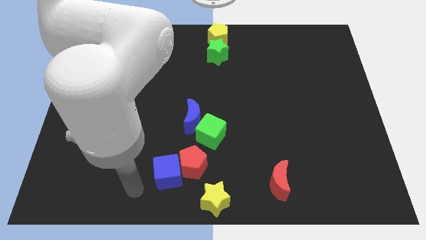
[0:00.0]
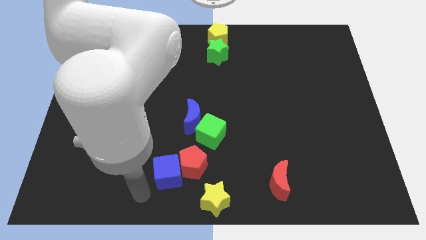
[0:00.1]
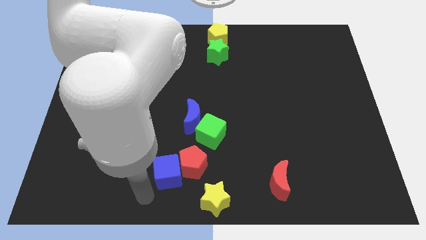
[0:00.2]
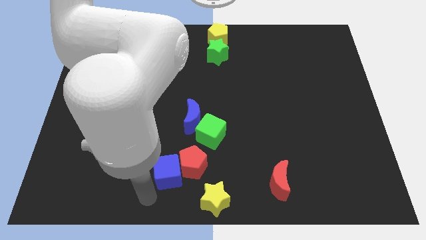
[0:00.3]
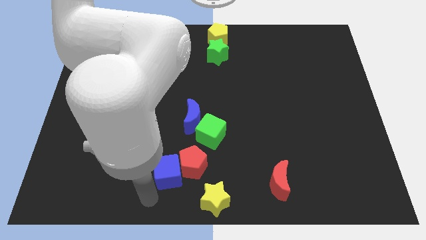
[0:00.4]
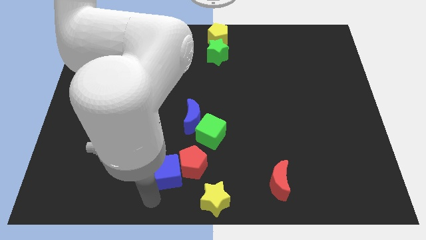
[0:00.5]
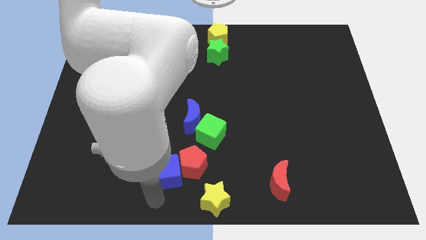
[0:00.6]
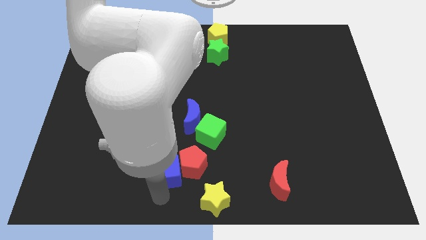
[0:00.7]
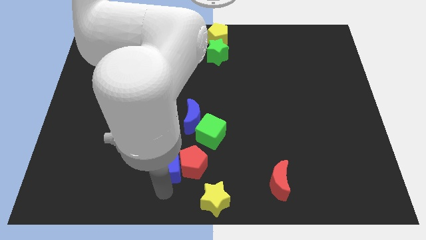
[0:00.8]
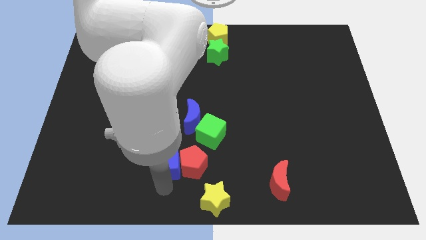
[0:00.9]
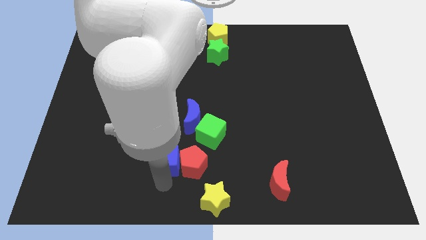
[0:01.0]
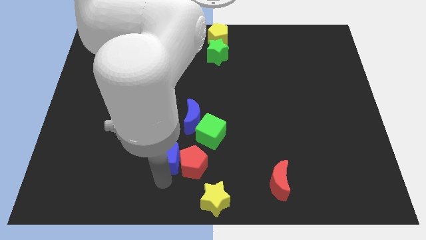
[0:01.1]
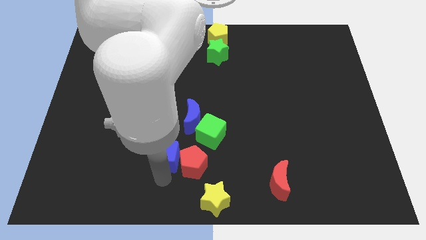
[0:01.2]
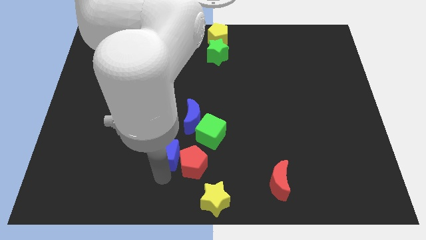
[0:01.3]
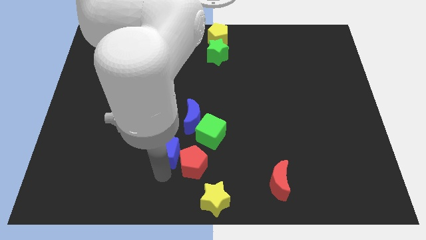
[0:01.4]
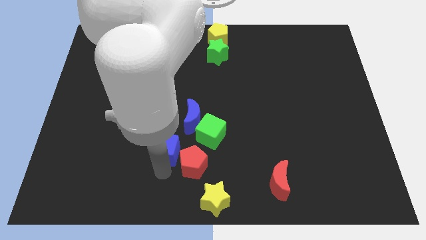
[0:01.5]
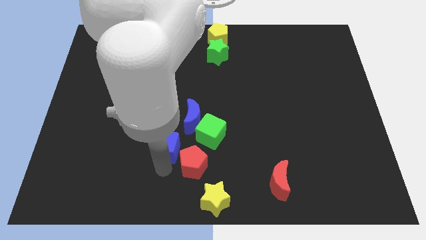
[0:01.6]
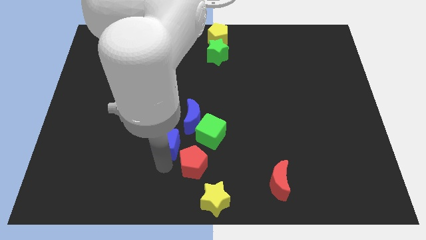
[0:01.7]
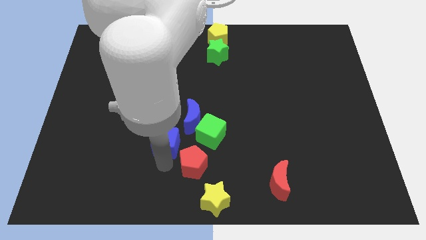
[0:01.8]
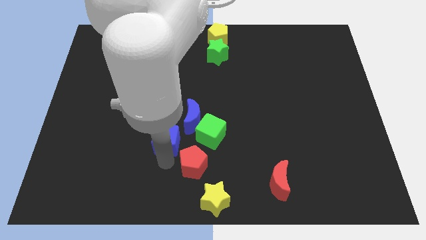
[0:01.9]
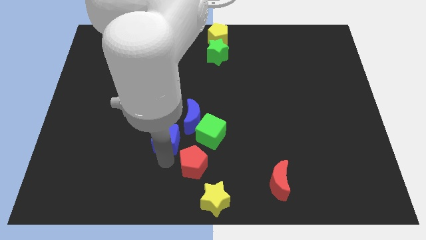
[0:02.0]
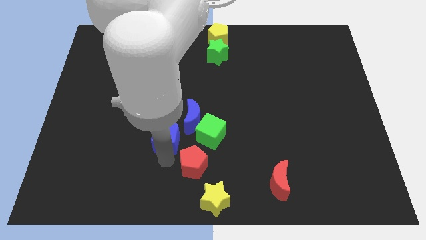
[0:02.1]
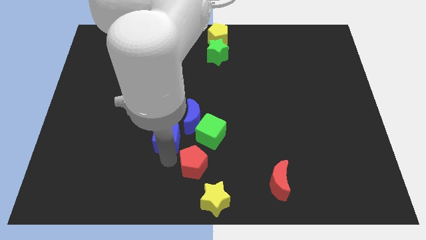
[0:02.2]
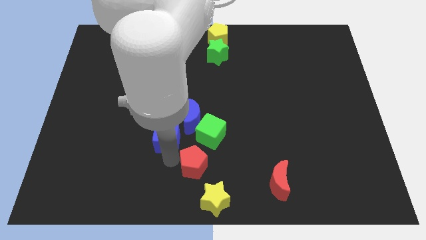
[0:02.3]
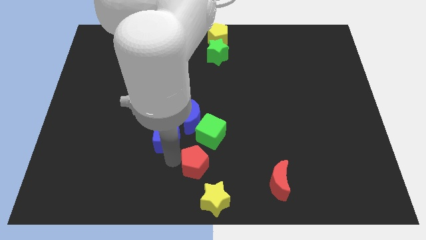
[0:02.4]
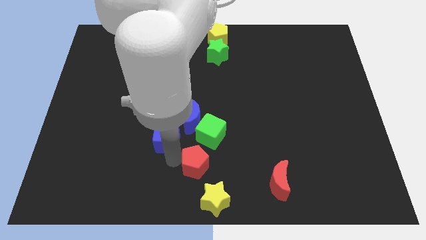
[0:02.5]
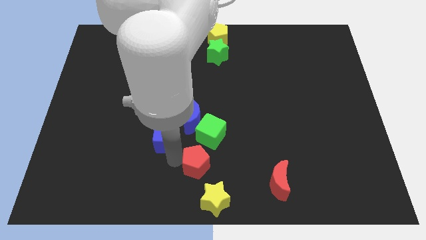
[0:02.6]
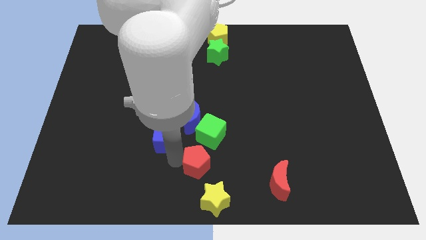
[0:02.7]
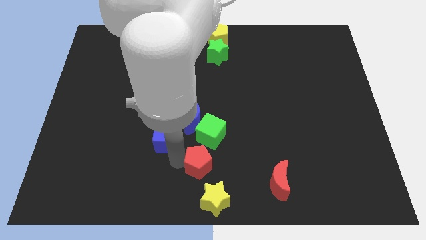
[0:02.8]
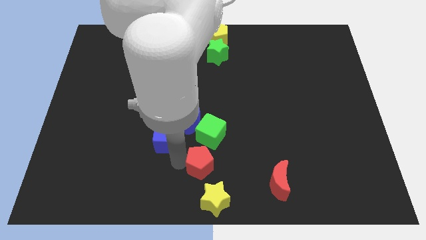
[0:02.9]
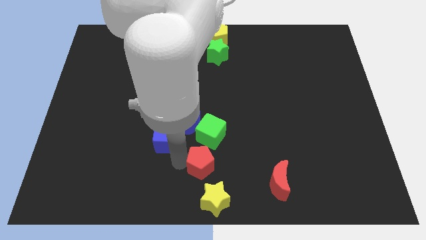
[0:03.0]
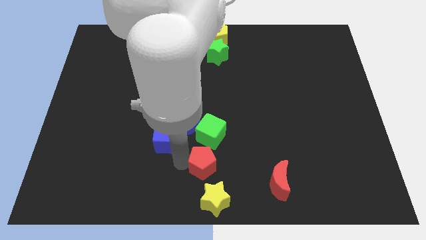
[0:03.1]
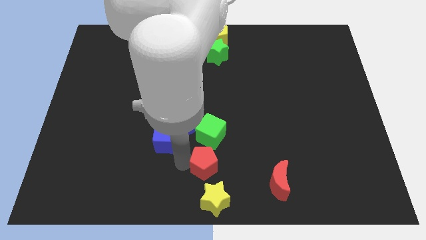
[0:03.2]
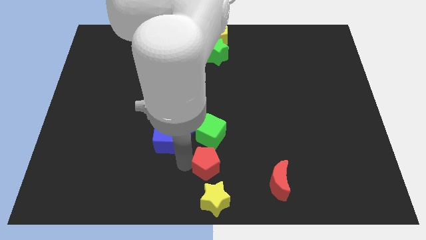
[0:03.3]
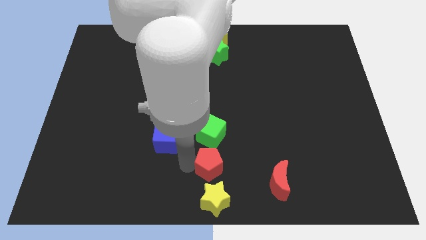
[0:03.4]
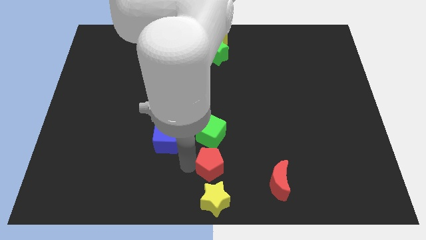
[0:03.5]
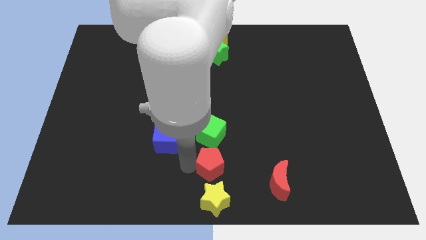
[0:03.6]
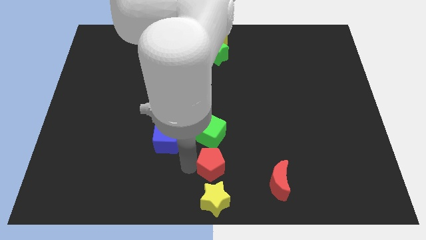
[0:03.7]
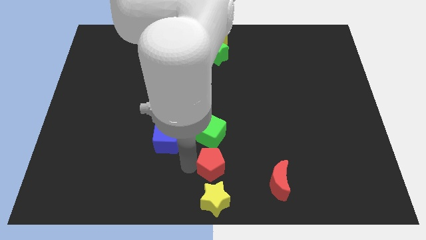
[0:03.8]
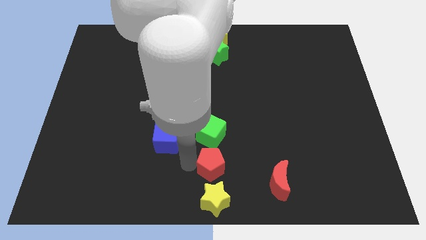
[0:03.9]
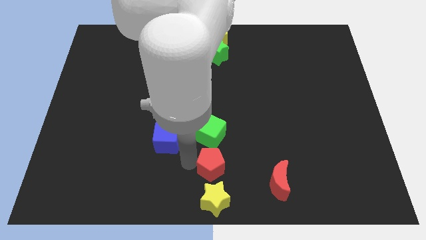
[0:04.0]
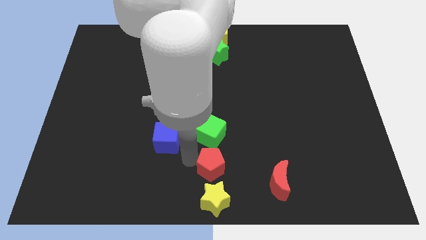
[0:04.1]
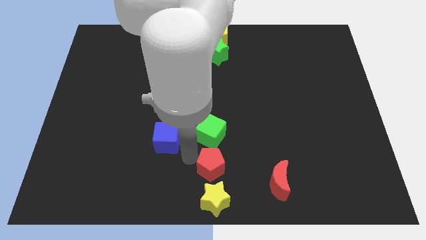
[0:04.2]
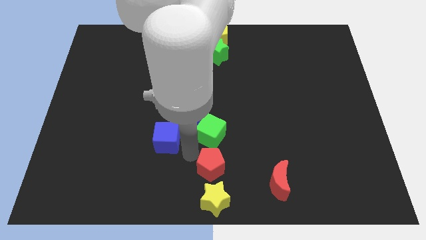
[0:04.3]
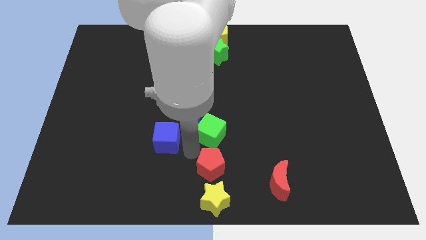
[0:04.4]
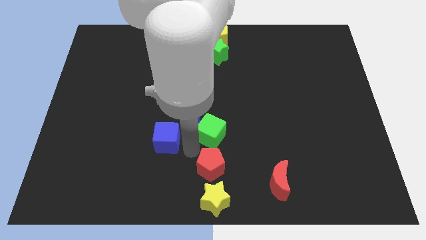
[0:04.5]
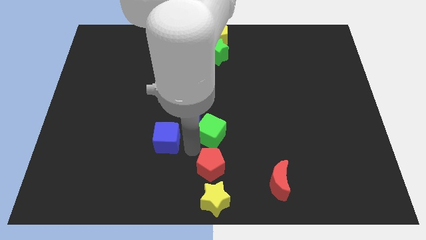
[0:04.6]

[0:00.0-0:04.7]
separate the red pentagon and blue cube

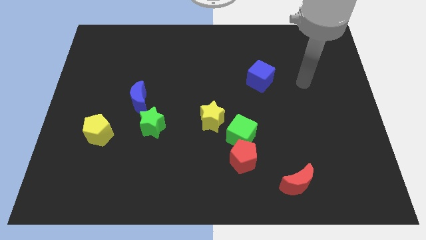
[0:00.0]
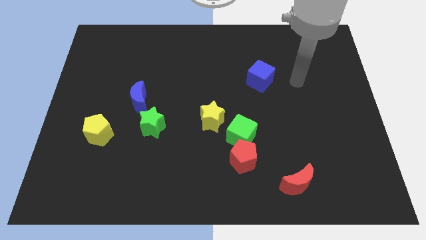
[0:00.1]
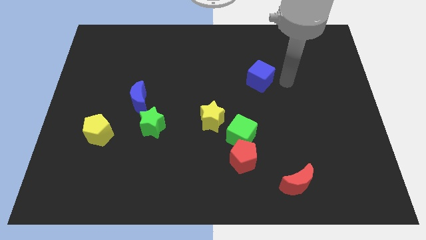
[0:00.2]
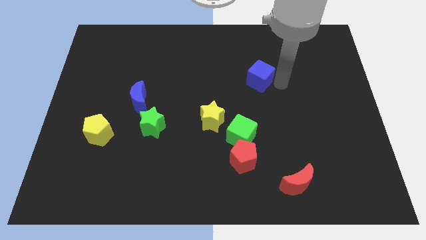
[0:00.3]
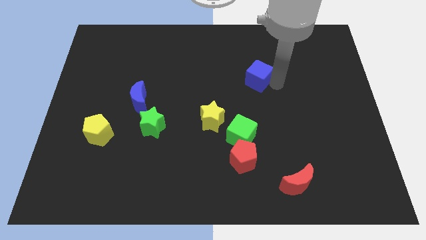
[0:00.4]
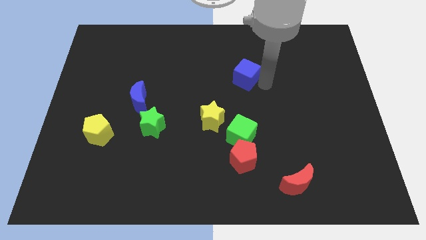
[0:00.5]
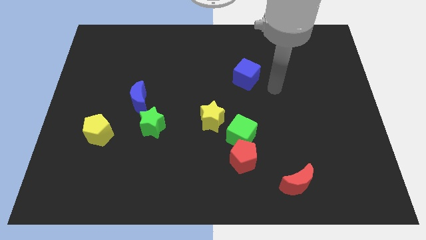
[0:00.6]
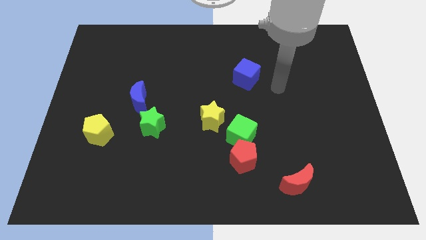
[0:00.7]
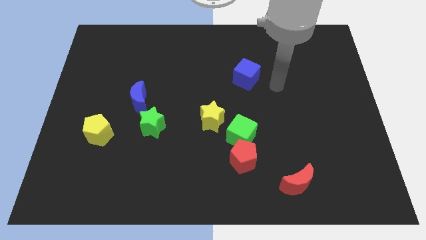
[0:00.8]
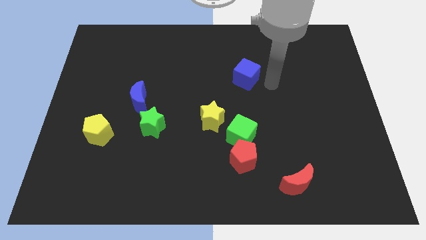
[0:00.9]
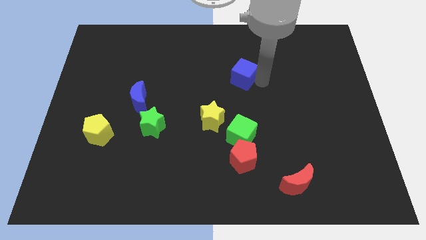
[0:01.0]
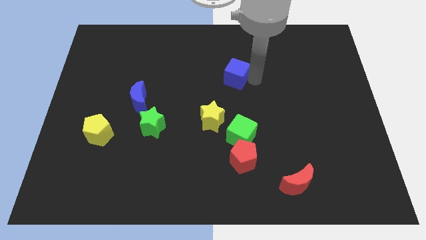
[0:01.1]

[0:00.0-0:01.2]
push the blue cube slightly to the left of the board

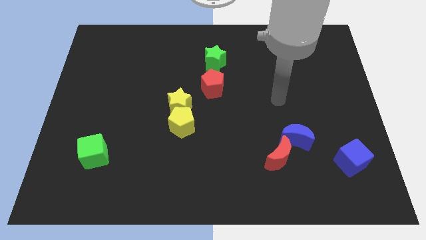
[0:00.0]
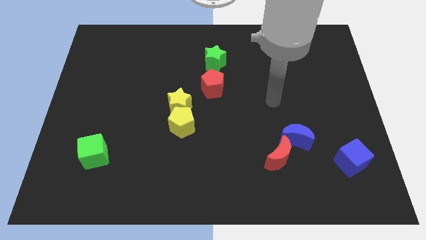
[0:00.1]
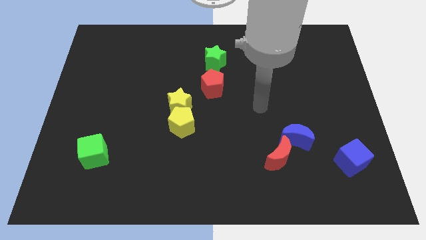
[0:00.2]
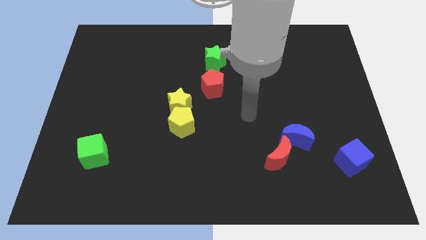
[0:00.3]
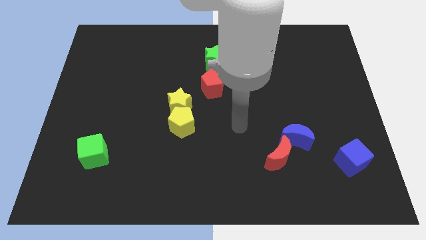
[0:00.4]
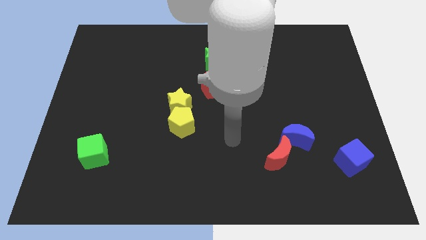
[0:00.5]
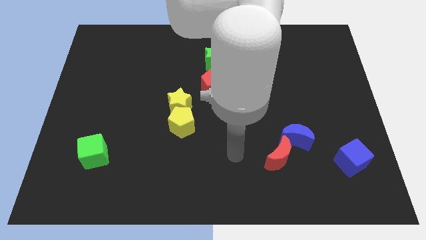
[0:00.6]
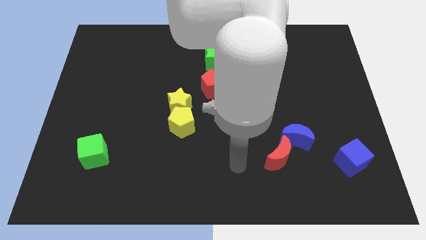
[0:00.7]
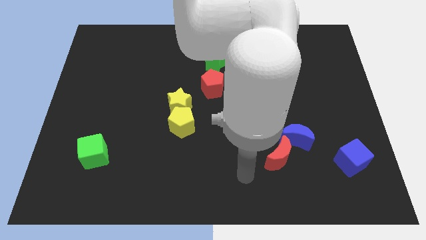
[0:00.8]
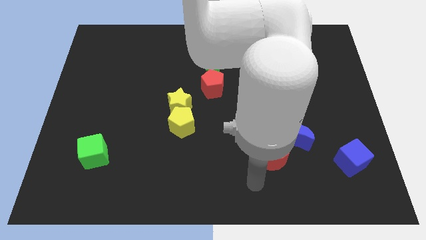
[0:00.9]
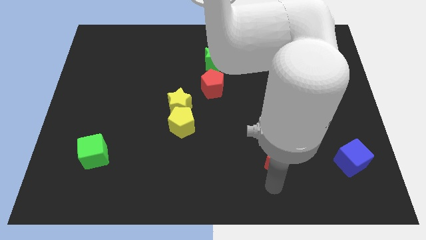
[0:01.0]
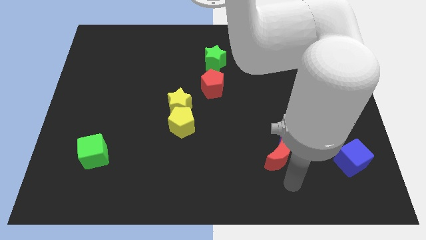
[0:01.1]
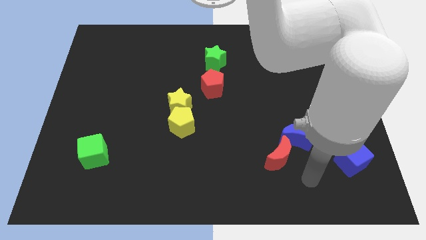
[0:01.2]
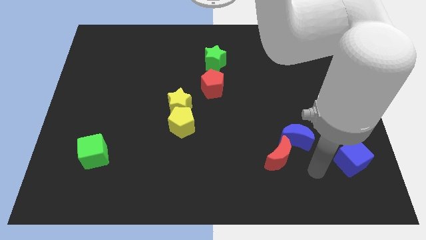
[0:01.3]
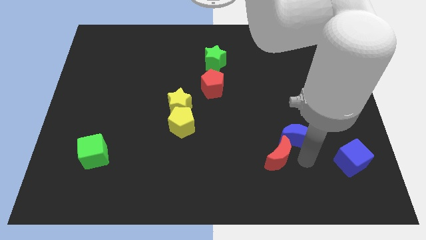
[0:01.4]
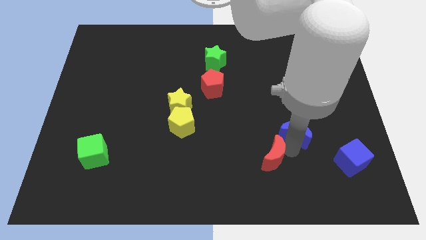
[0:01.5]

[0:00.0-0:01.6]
put your hand vertically below the blue moon

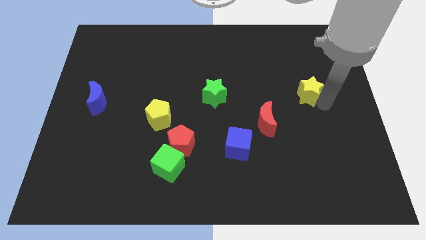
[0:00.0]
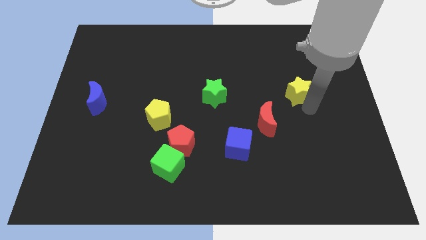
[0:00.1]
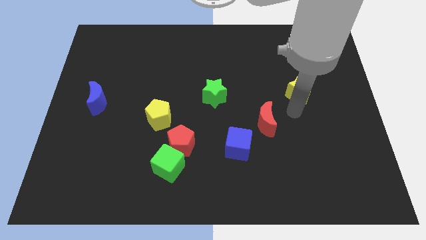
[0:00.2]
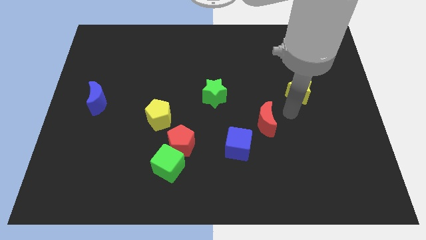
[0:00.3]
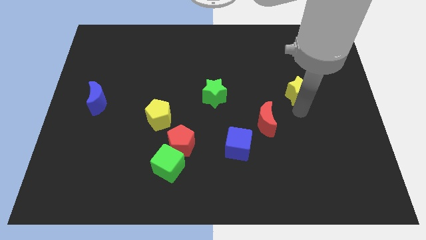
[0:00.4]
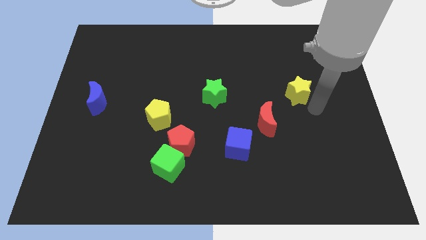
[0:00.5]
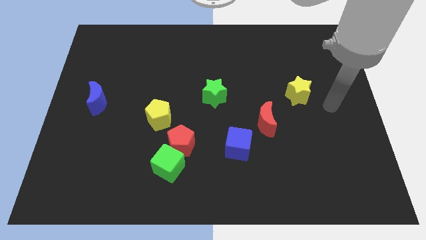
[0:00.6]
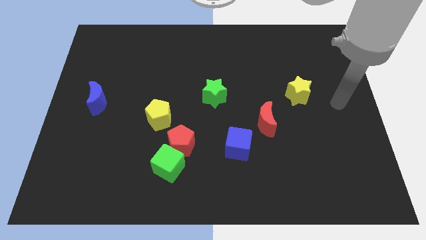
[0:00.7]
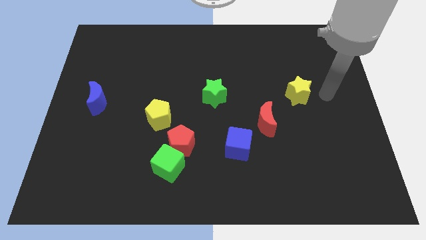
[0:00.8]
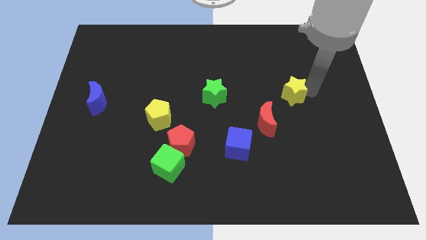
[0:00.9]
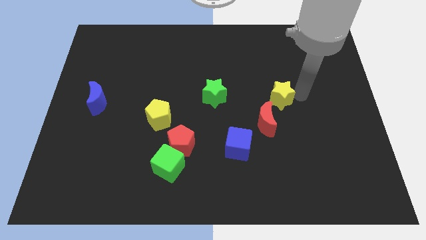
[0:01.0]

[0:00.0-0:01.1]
push the yellow star to the top tight of the red crescent

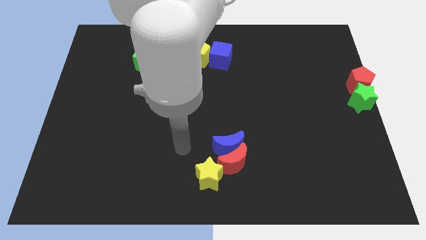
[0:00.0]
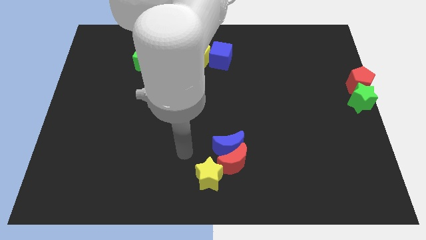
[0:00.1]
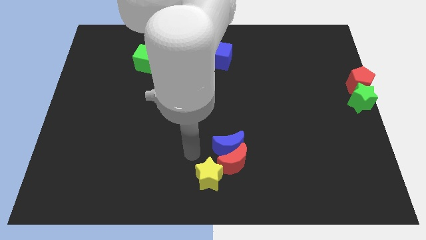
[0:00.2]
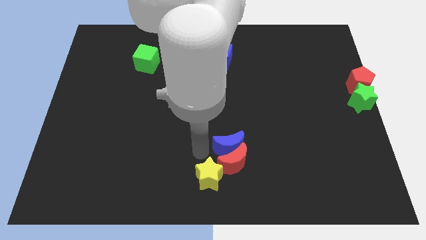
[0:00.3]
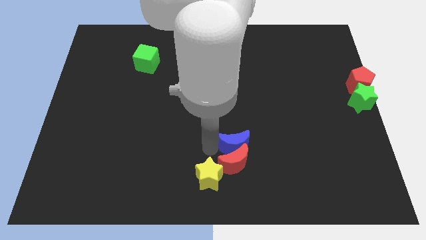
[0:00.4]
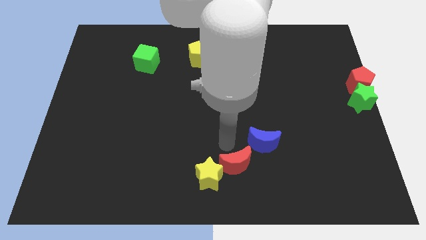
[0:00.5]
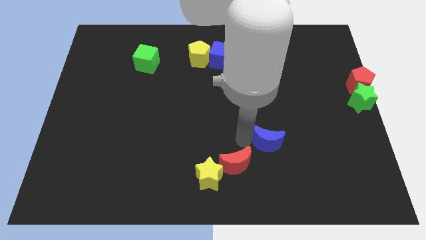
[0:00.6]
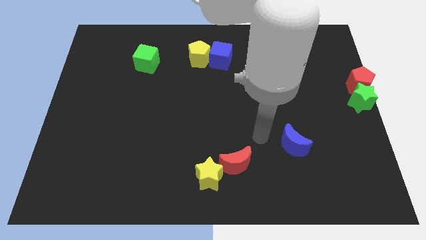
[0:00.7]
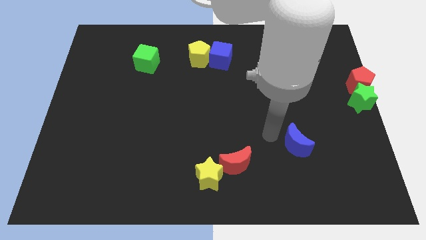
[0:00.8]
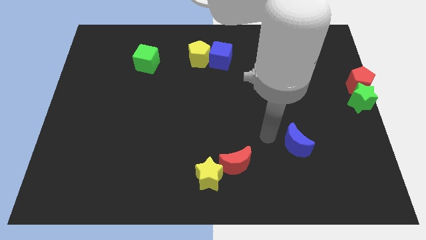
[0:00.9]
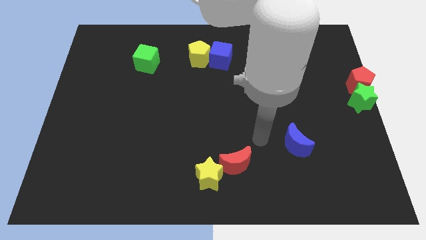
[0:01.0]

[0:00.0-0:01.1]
separate blue moon from red crescent
